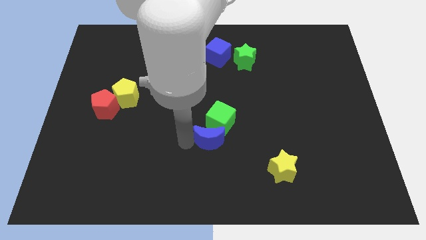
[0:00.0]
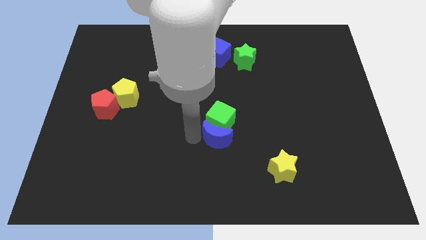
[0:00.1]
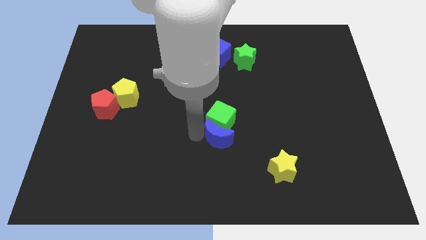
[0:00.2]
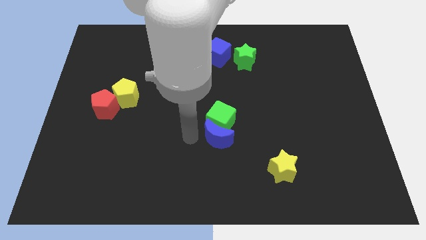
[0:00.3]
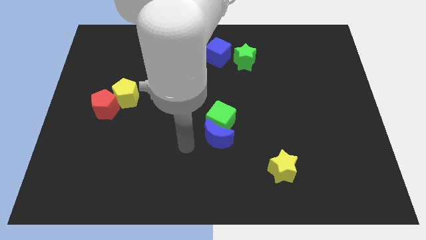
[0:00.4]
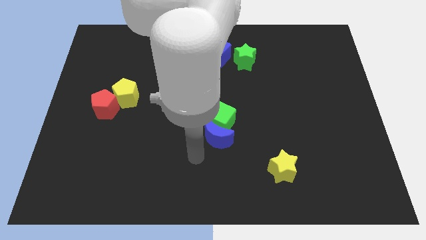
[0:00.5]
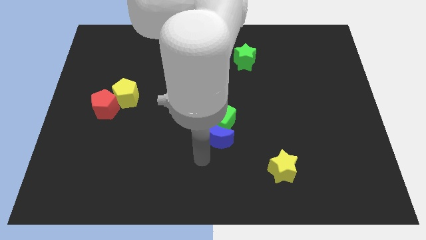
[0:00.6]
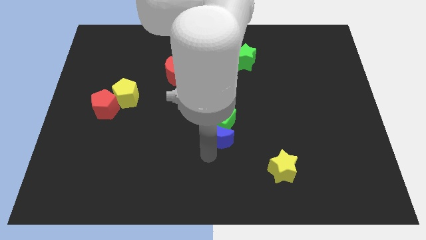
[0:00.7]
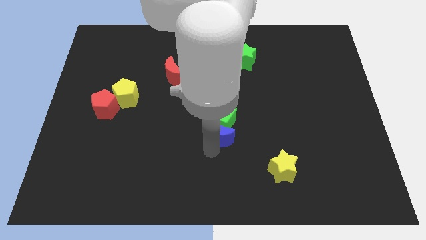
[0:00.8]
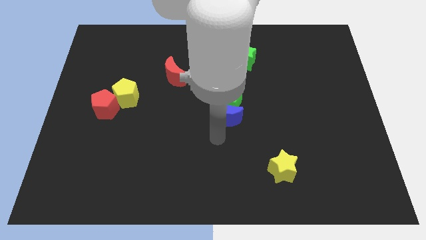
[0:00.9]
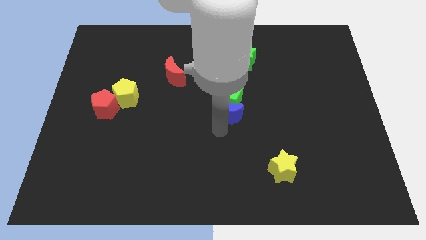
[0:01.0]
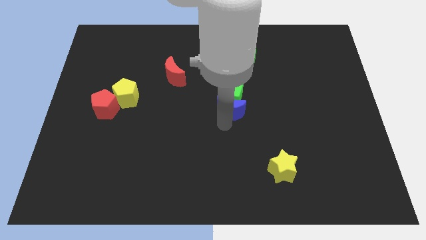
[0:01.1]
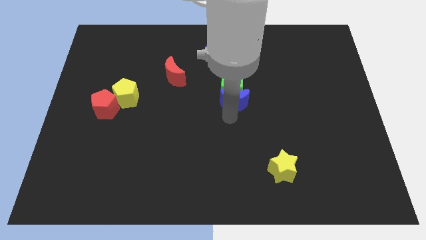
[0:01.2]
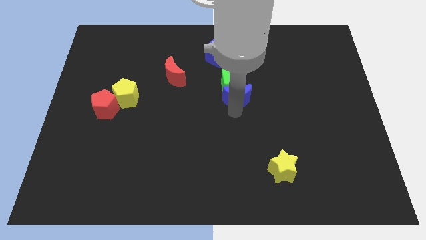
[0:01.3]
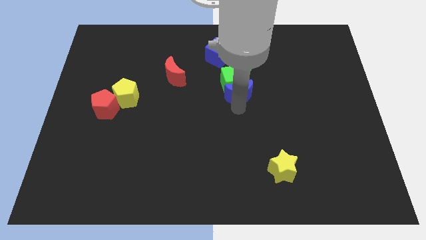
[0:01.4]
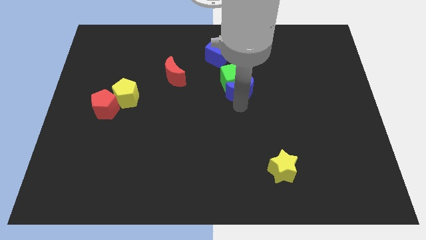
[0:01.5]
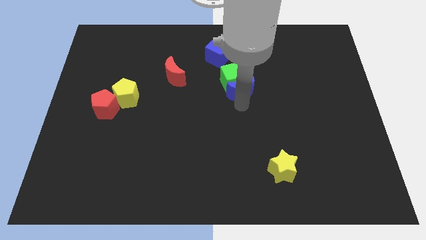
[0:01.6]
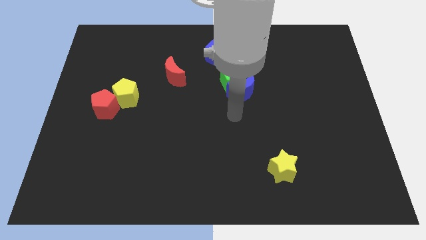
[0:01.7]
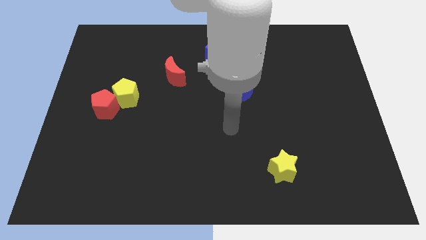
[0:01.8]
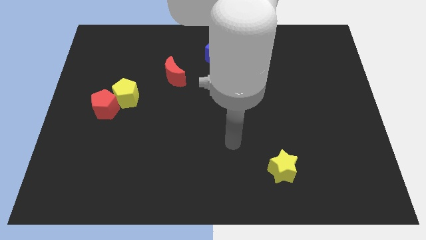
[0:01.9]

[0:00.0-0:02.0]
drag the blue moon and green cube towards top side

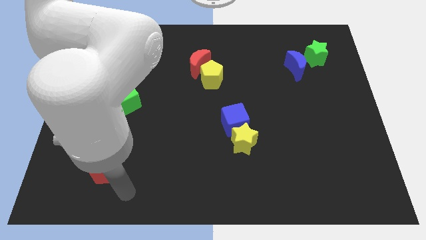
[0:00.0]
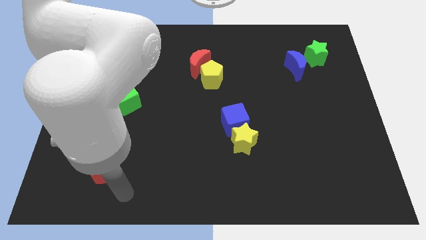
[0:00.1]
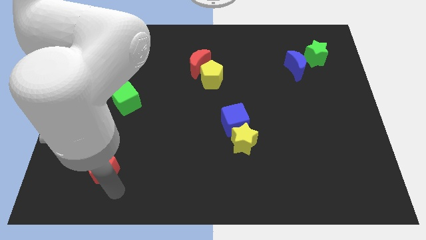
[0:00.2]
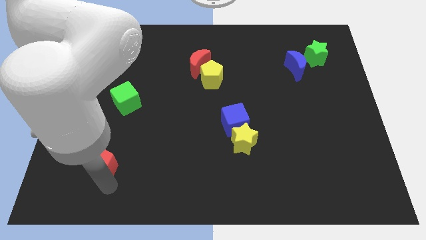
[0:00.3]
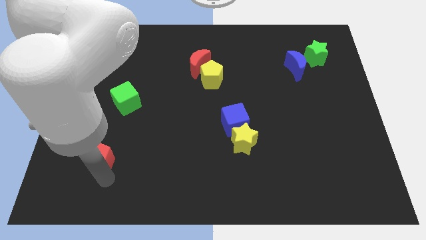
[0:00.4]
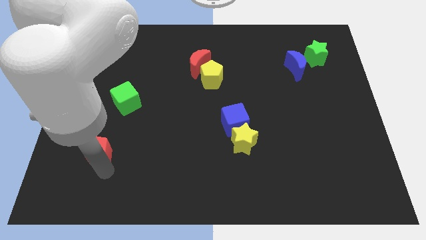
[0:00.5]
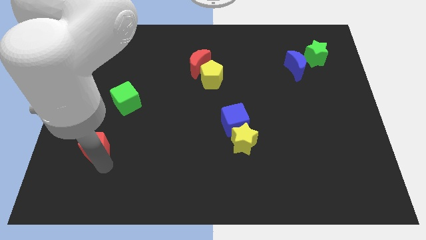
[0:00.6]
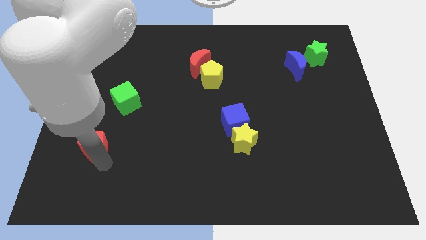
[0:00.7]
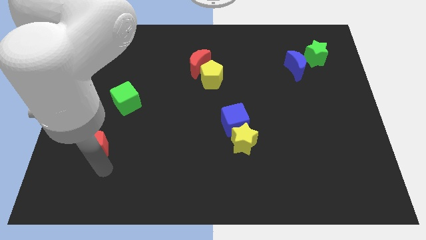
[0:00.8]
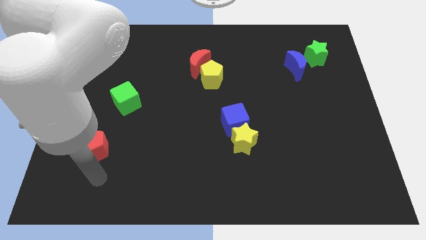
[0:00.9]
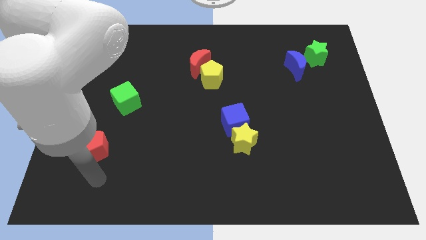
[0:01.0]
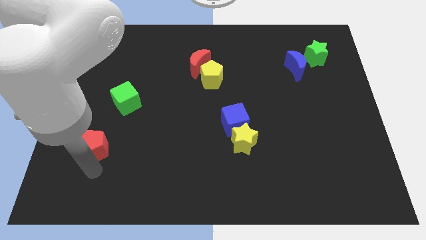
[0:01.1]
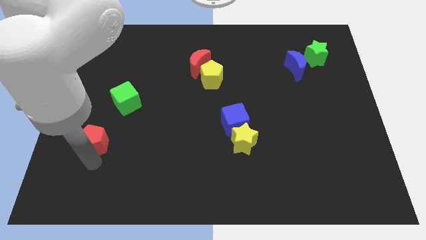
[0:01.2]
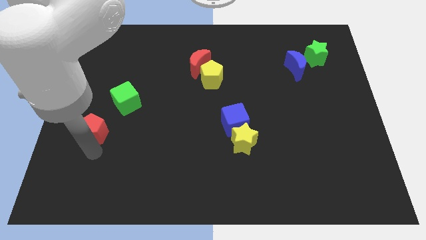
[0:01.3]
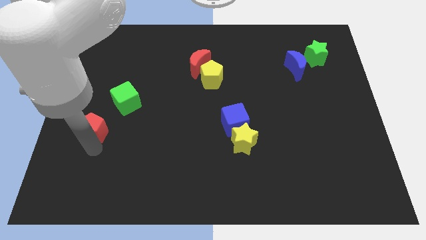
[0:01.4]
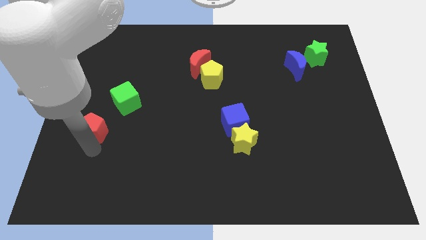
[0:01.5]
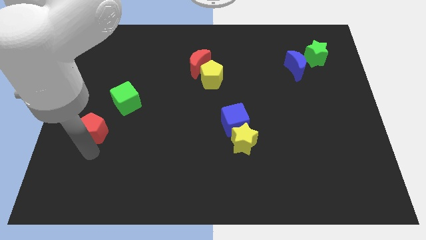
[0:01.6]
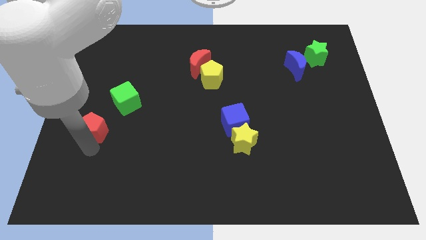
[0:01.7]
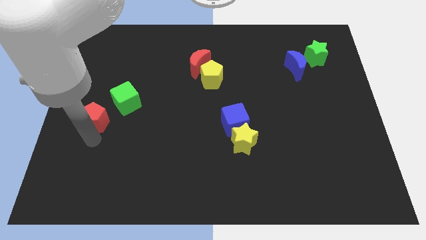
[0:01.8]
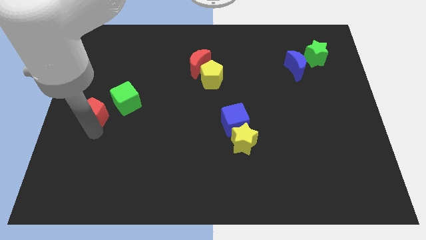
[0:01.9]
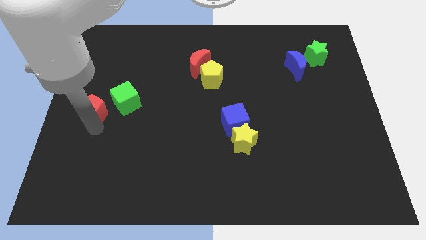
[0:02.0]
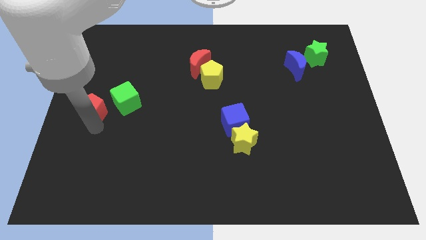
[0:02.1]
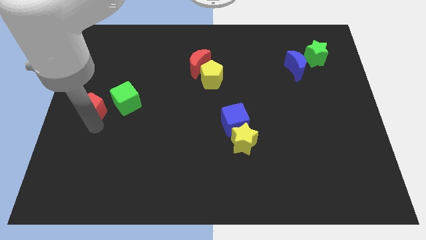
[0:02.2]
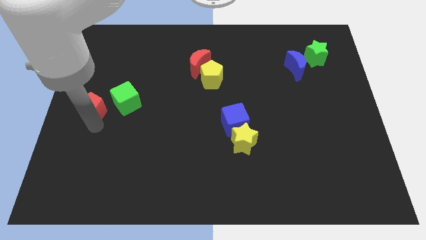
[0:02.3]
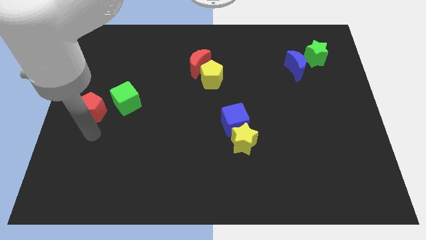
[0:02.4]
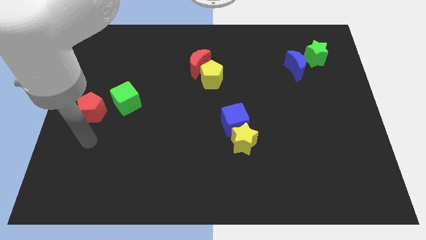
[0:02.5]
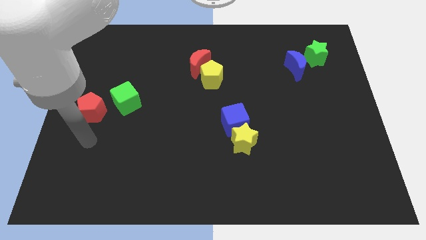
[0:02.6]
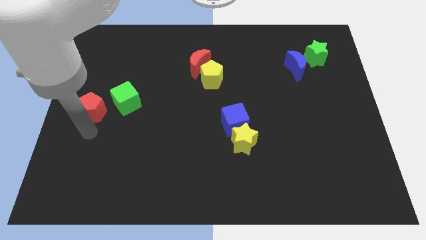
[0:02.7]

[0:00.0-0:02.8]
push the red pentagon below left to the green cube

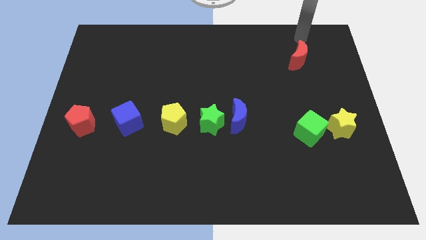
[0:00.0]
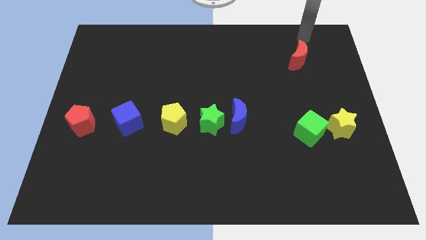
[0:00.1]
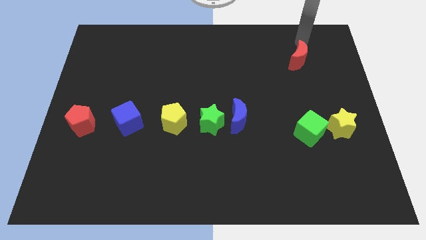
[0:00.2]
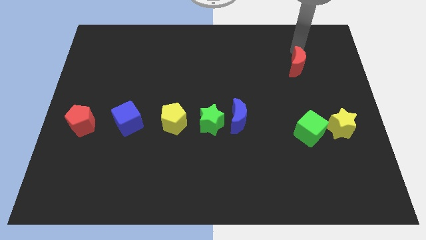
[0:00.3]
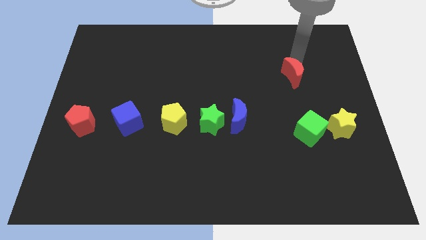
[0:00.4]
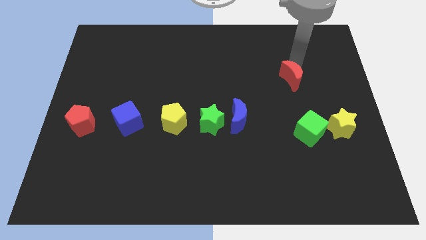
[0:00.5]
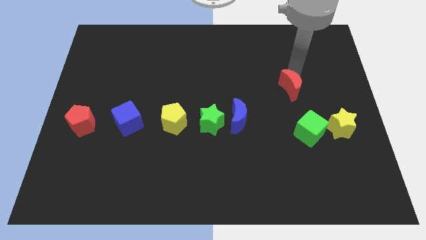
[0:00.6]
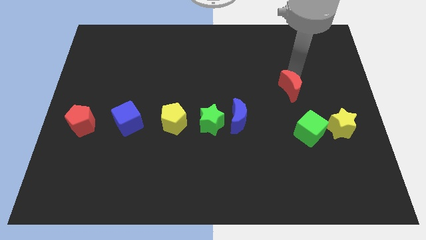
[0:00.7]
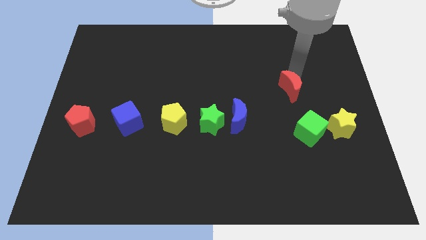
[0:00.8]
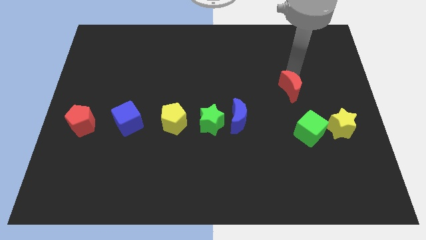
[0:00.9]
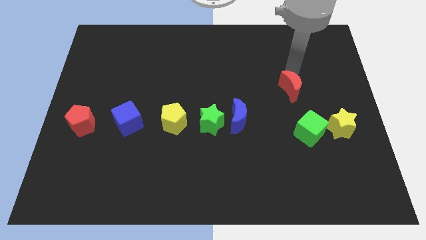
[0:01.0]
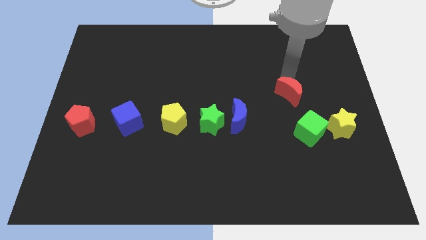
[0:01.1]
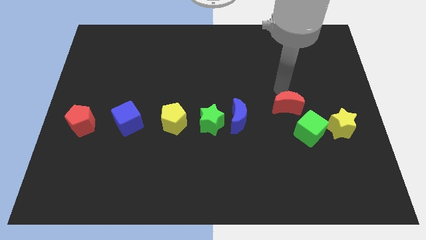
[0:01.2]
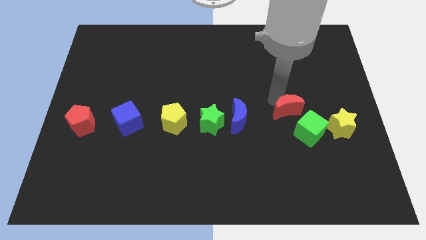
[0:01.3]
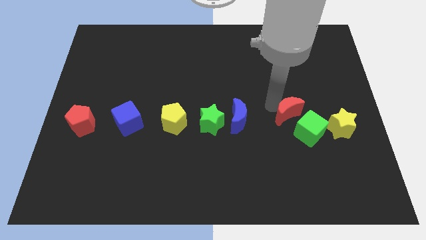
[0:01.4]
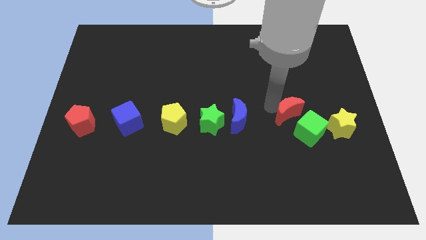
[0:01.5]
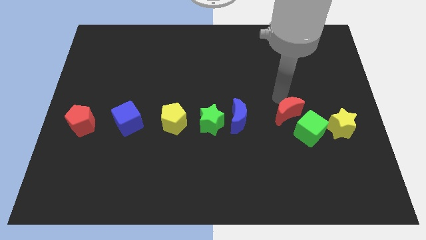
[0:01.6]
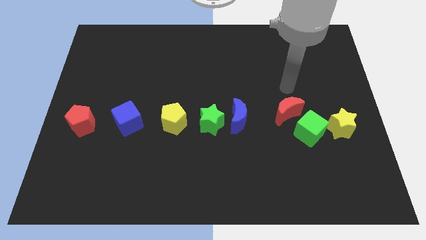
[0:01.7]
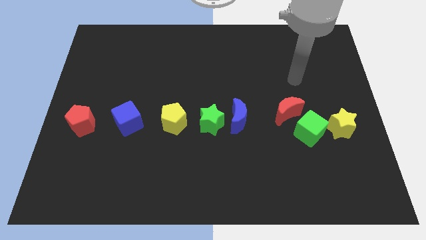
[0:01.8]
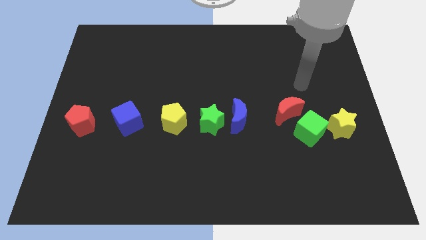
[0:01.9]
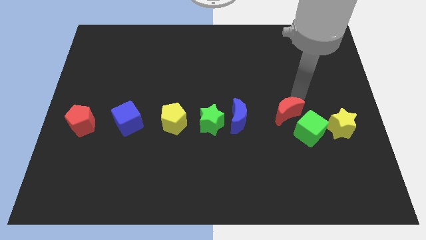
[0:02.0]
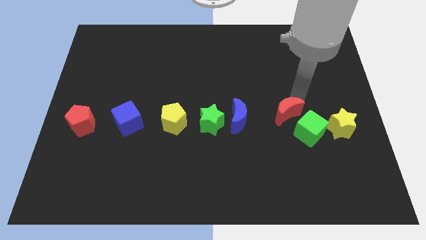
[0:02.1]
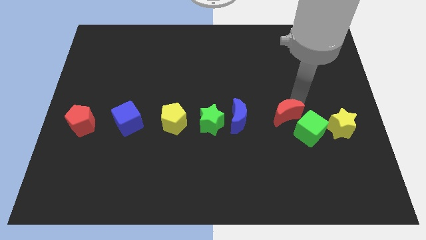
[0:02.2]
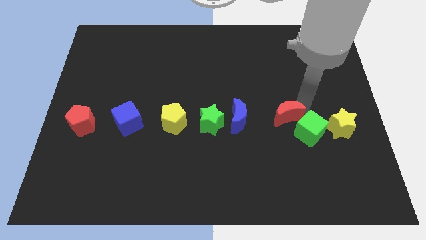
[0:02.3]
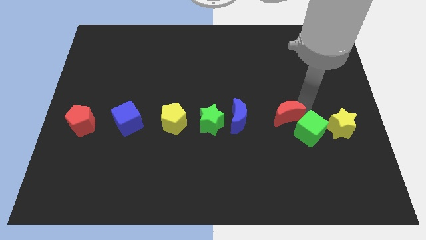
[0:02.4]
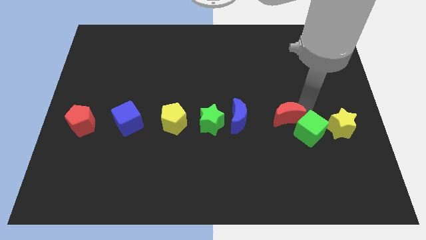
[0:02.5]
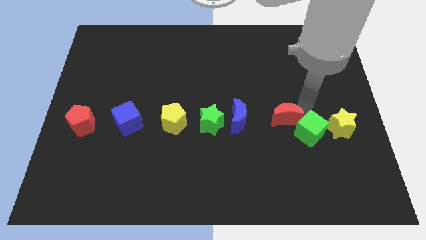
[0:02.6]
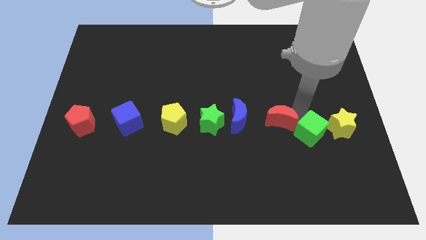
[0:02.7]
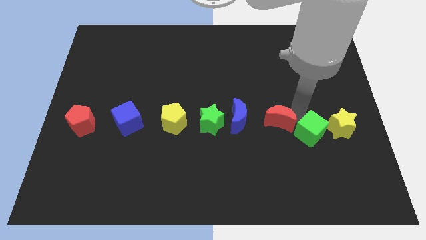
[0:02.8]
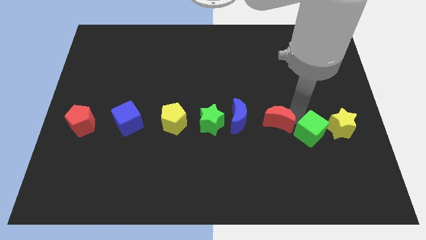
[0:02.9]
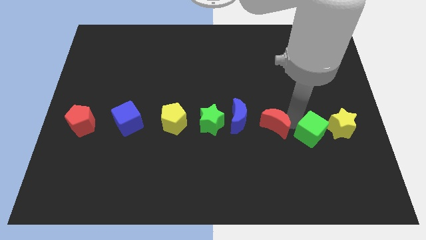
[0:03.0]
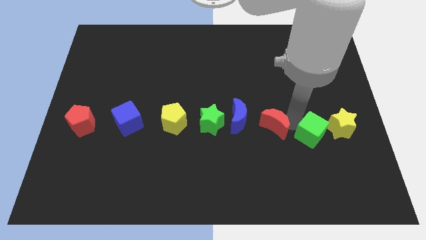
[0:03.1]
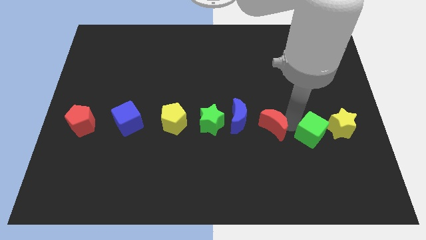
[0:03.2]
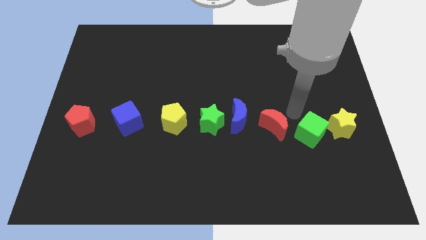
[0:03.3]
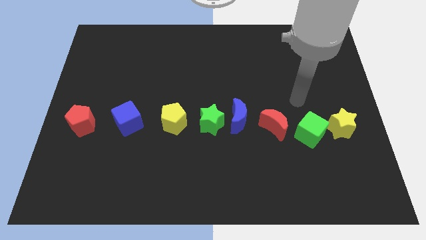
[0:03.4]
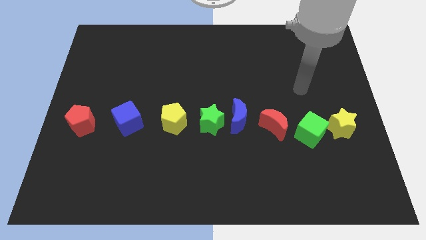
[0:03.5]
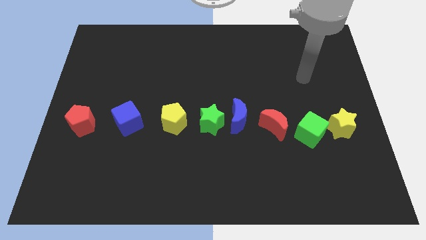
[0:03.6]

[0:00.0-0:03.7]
place the red crescent in between blue moon and green cube

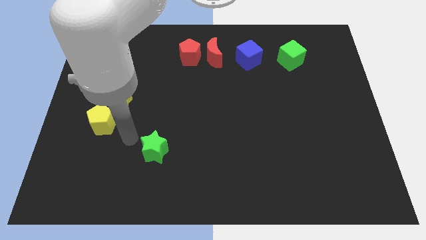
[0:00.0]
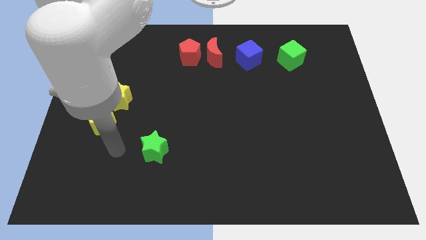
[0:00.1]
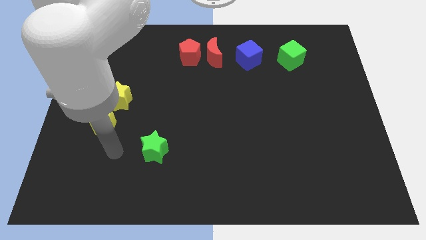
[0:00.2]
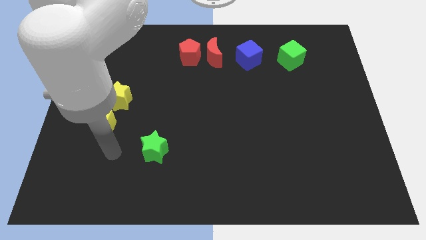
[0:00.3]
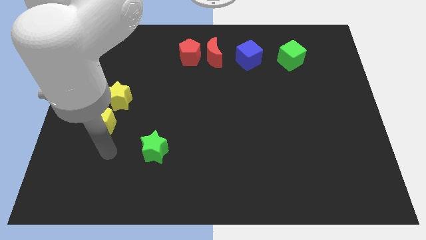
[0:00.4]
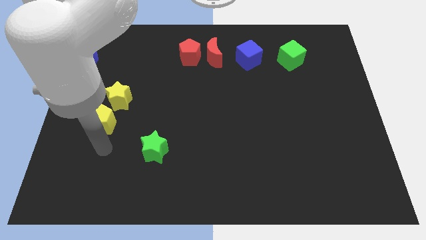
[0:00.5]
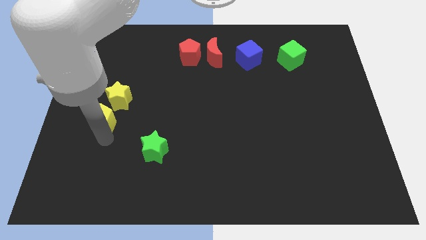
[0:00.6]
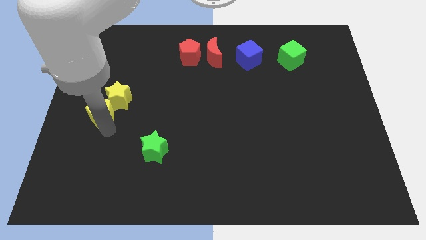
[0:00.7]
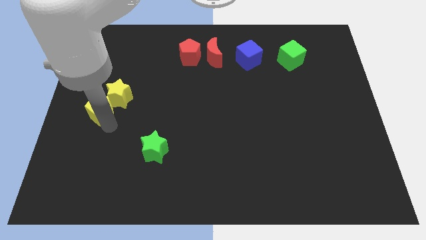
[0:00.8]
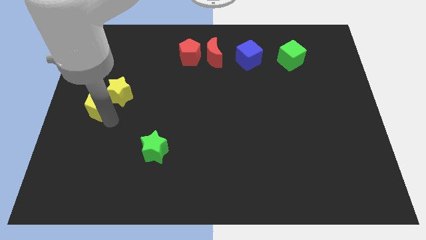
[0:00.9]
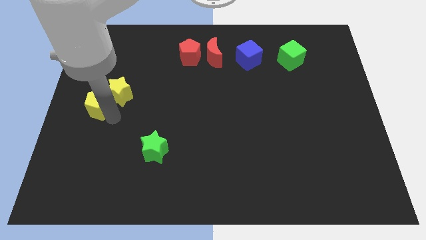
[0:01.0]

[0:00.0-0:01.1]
push the yellow pentagon into the yellow star
